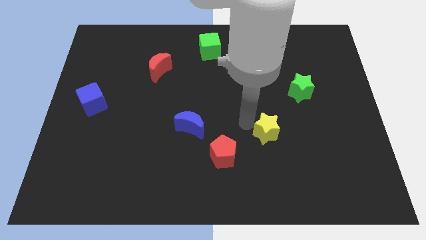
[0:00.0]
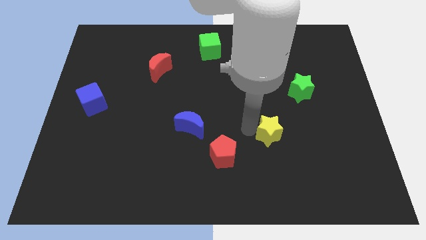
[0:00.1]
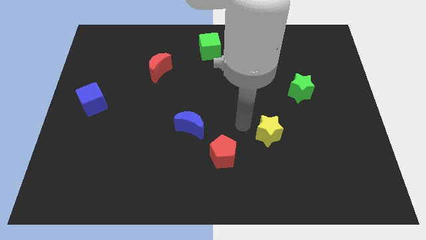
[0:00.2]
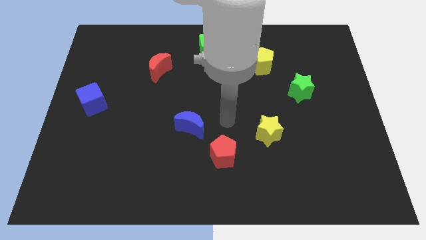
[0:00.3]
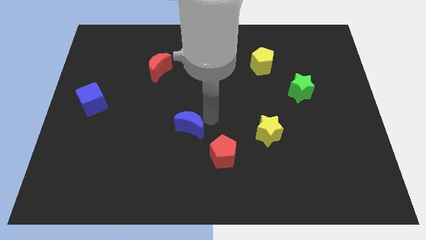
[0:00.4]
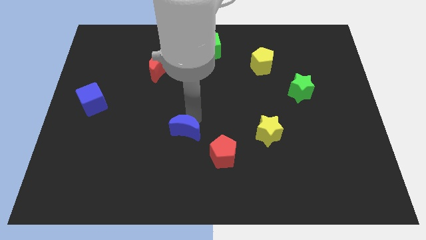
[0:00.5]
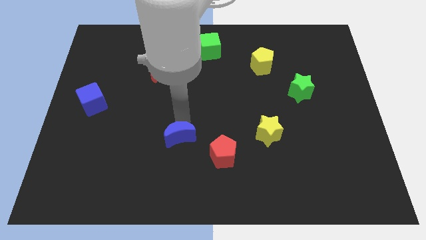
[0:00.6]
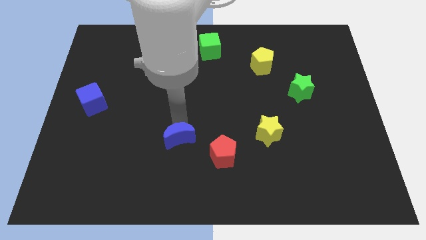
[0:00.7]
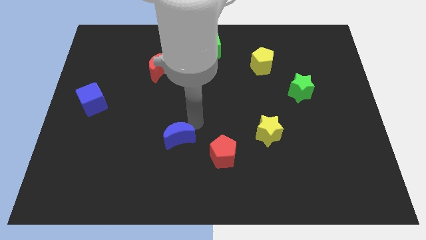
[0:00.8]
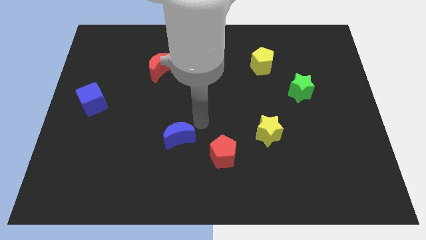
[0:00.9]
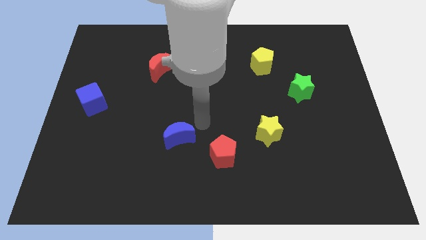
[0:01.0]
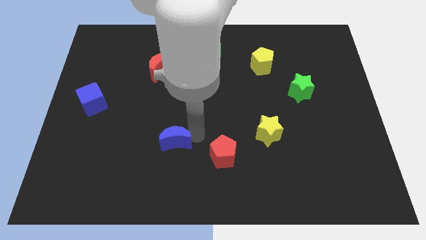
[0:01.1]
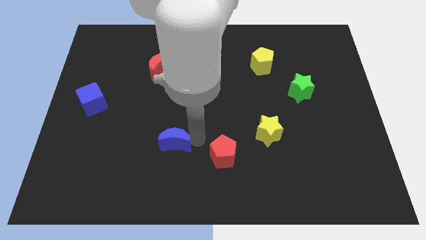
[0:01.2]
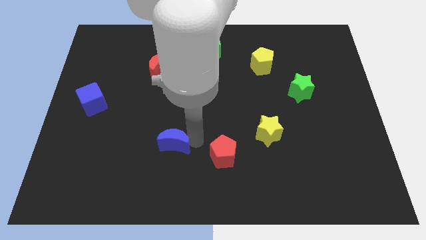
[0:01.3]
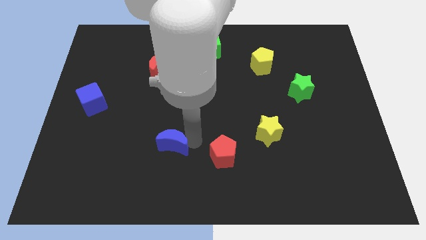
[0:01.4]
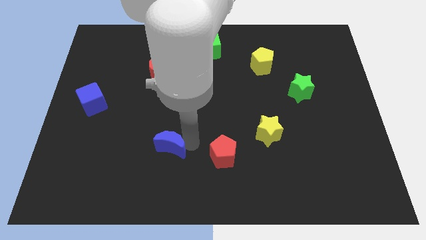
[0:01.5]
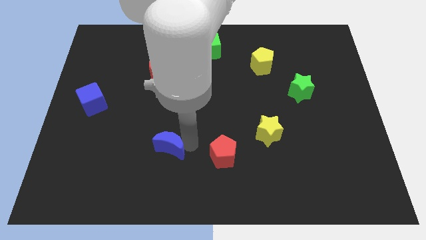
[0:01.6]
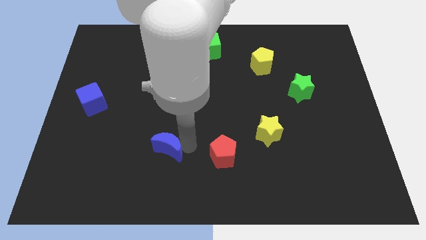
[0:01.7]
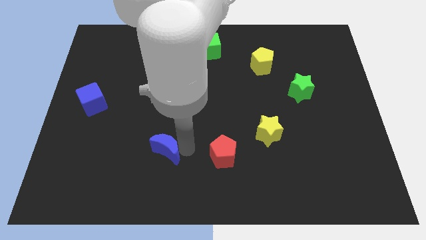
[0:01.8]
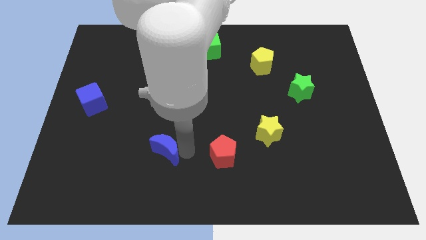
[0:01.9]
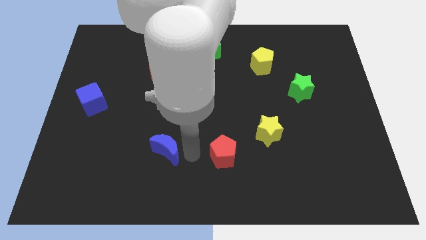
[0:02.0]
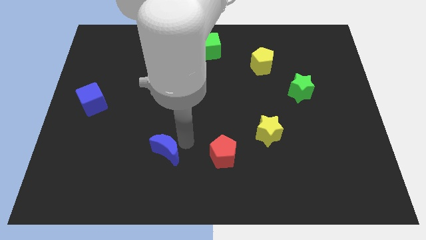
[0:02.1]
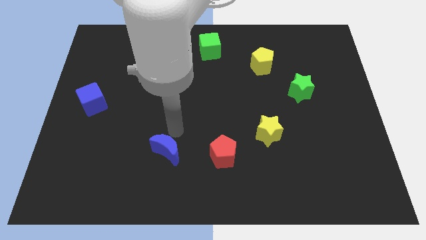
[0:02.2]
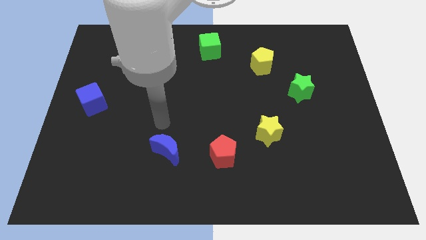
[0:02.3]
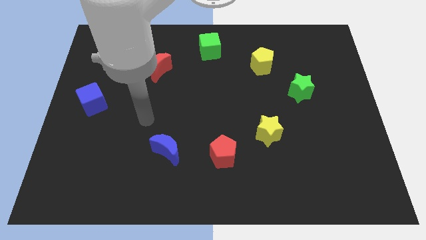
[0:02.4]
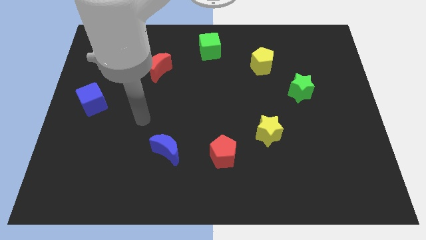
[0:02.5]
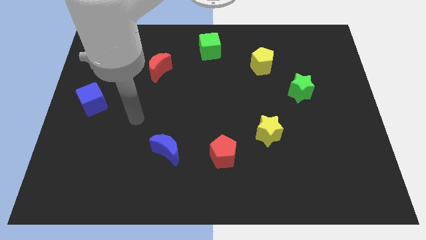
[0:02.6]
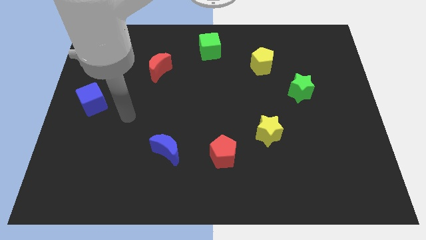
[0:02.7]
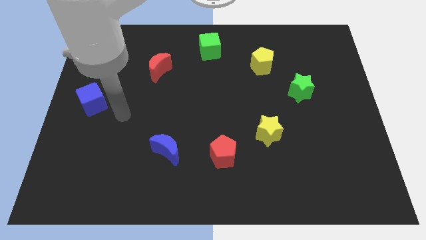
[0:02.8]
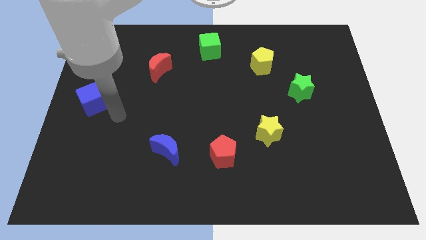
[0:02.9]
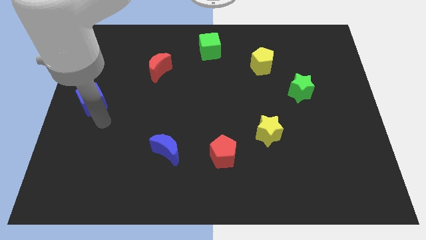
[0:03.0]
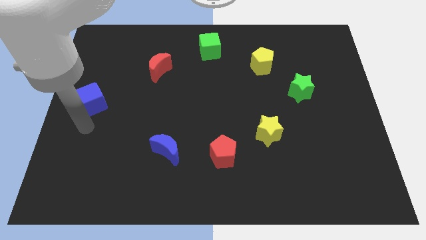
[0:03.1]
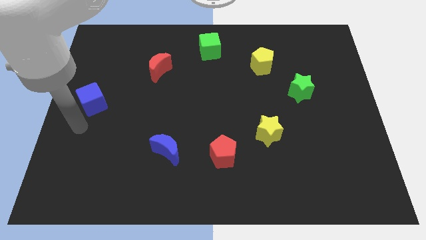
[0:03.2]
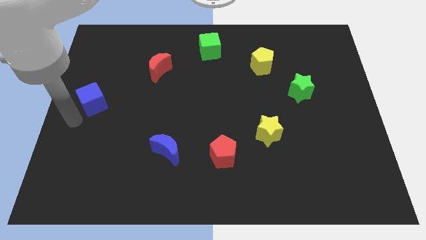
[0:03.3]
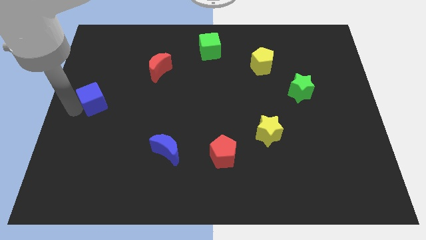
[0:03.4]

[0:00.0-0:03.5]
place the blue moon in between the red pentagon and blue cube

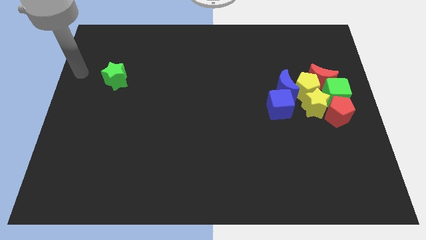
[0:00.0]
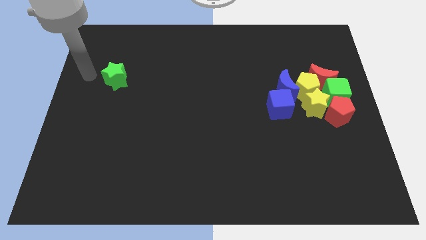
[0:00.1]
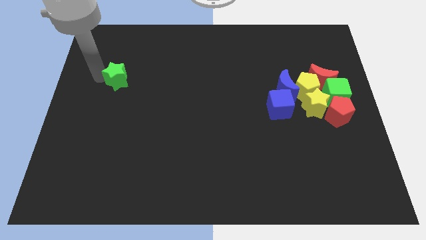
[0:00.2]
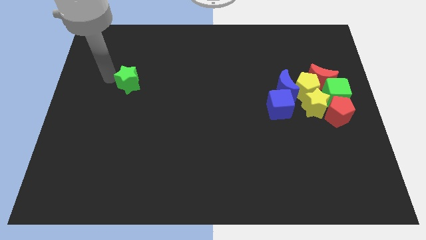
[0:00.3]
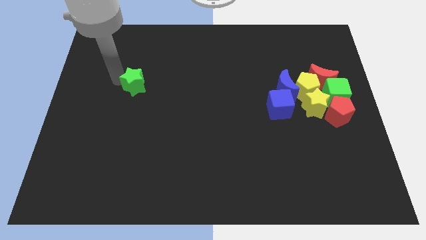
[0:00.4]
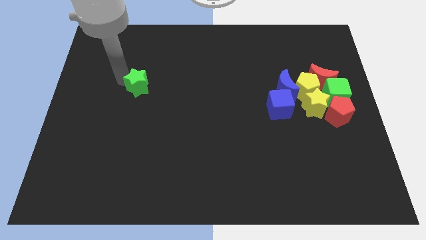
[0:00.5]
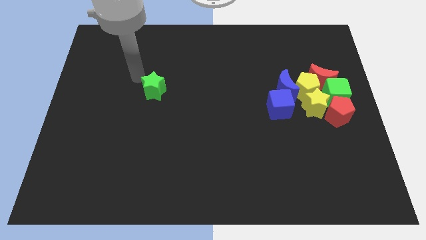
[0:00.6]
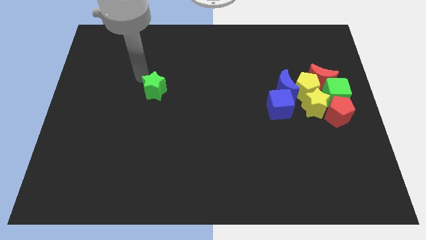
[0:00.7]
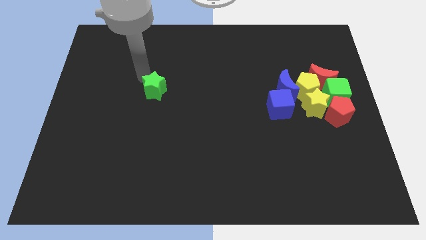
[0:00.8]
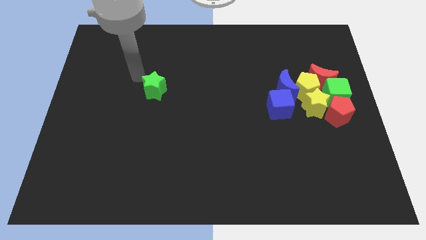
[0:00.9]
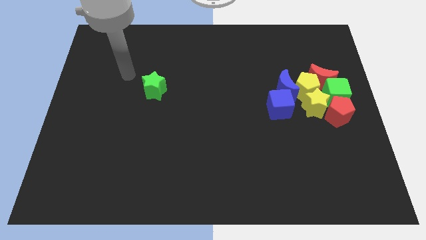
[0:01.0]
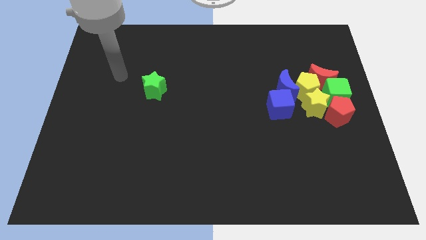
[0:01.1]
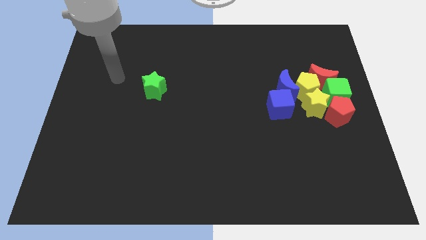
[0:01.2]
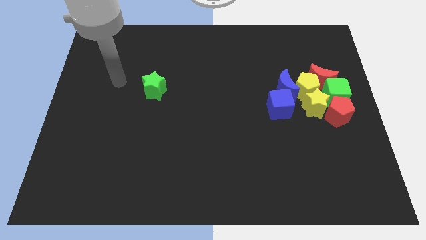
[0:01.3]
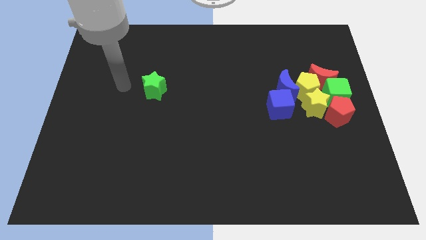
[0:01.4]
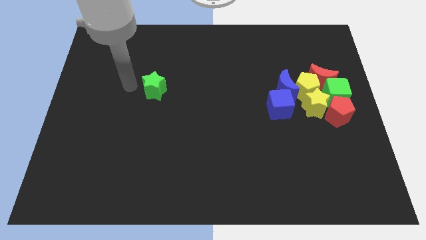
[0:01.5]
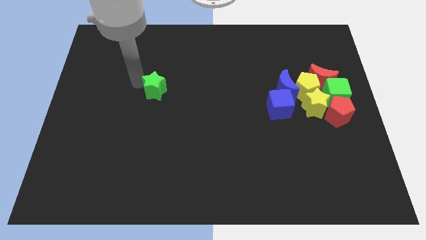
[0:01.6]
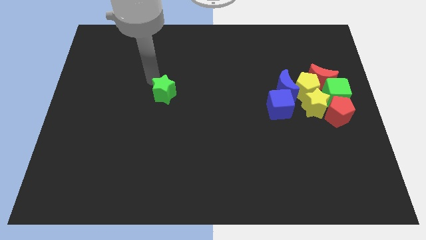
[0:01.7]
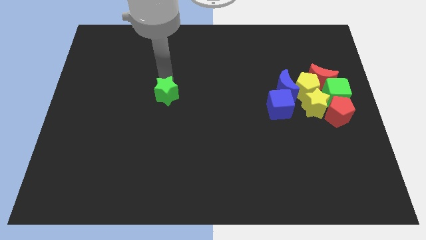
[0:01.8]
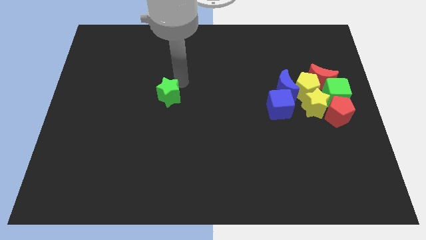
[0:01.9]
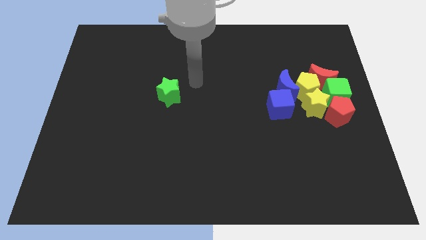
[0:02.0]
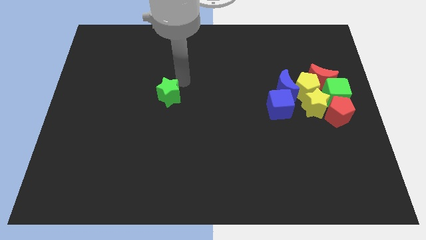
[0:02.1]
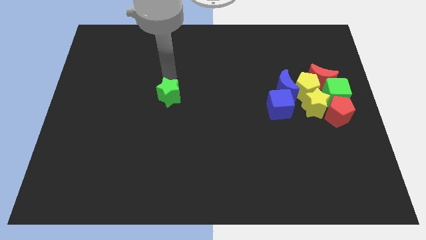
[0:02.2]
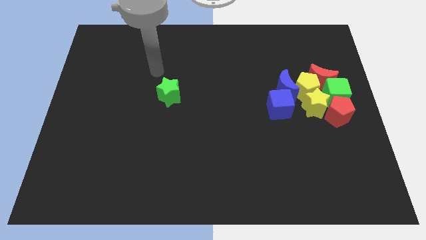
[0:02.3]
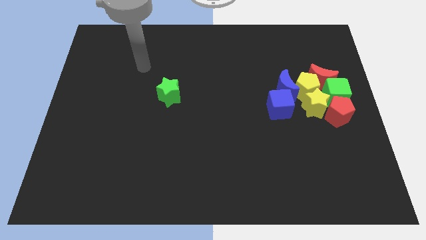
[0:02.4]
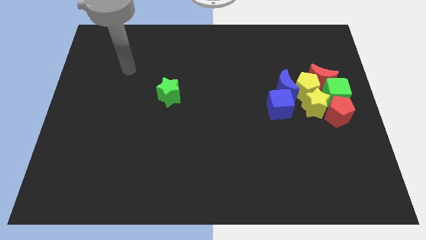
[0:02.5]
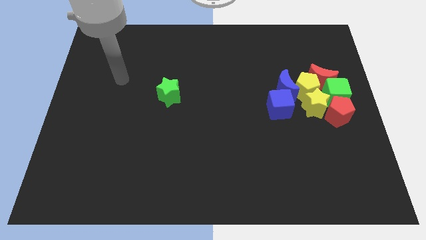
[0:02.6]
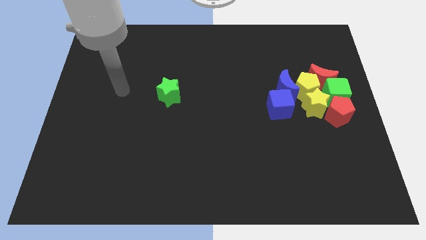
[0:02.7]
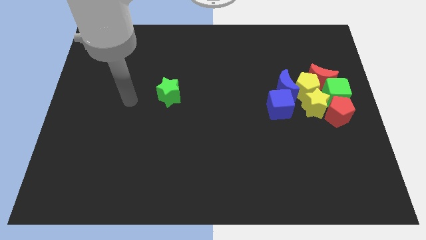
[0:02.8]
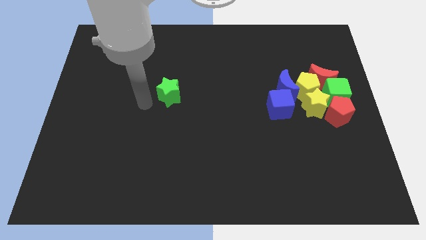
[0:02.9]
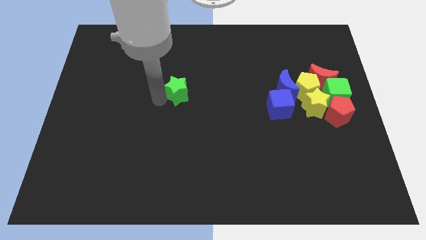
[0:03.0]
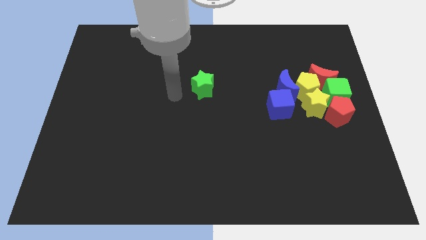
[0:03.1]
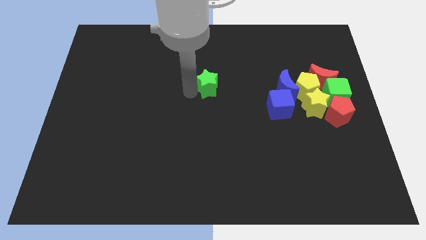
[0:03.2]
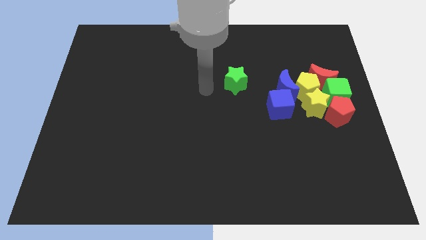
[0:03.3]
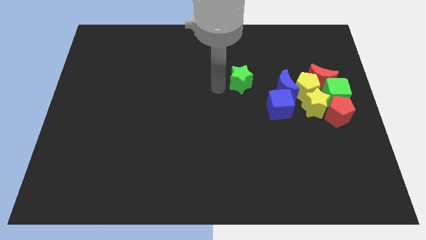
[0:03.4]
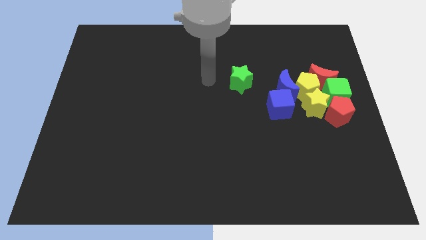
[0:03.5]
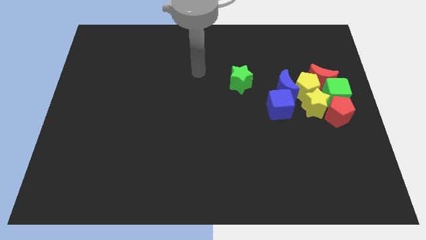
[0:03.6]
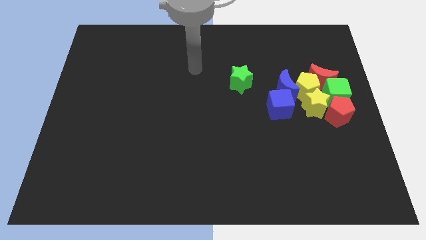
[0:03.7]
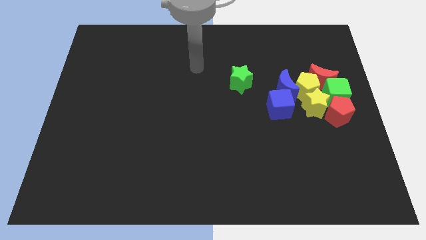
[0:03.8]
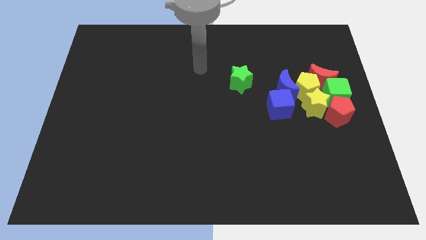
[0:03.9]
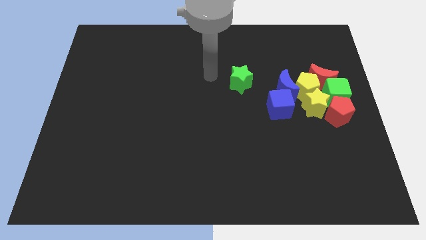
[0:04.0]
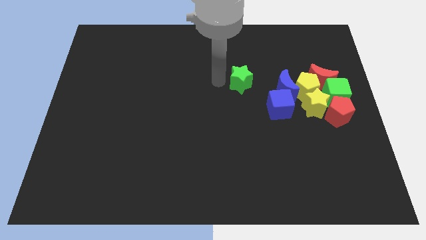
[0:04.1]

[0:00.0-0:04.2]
move the green star to the left of blue blocks

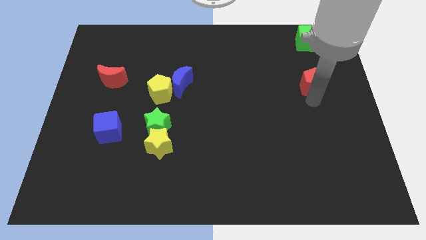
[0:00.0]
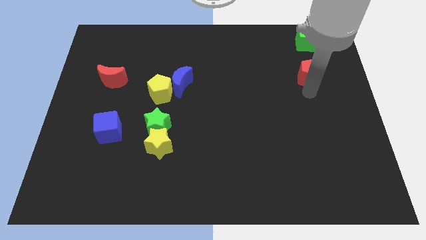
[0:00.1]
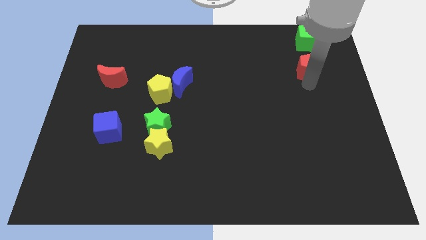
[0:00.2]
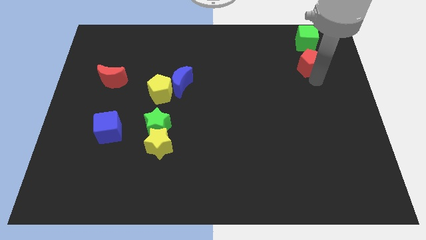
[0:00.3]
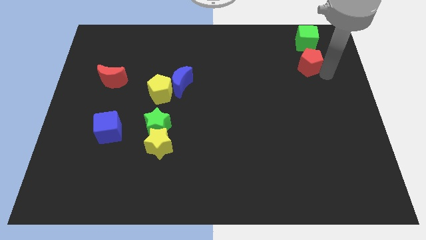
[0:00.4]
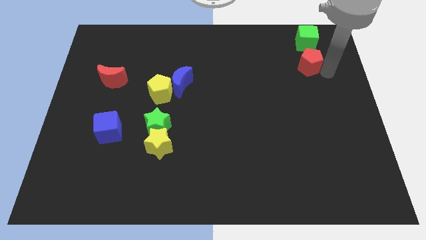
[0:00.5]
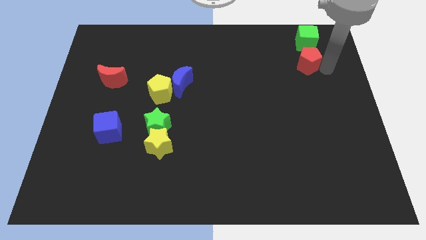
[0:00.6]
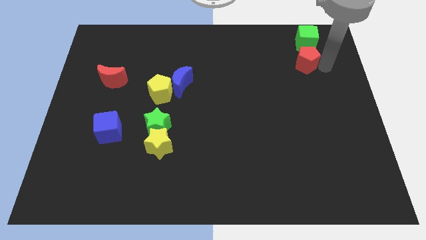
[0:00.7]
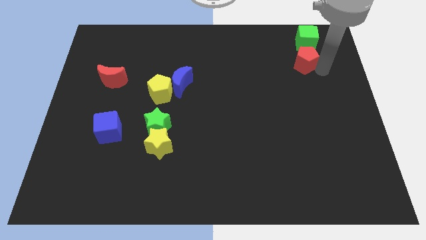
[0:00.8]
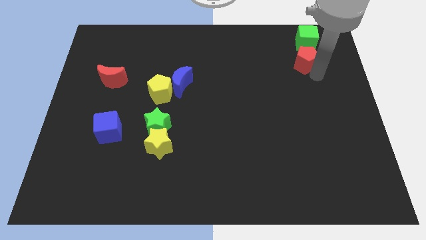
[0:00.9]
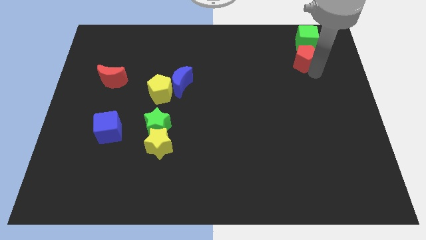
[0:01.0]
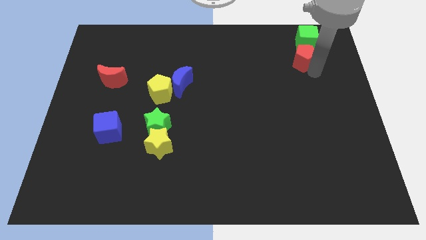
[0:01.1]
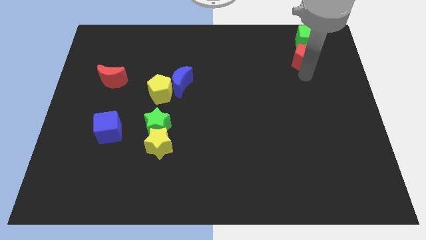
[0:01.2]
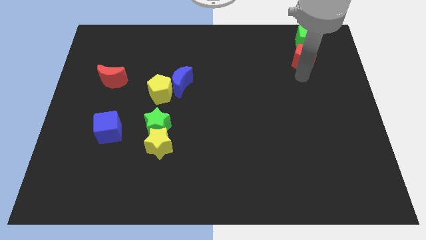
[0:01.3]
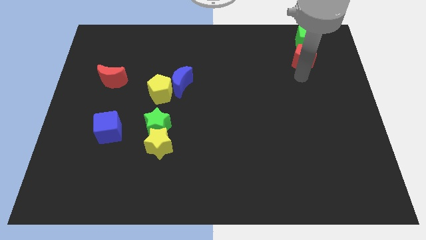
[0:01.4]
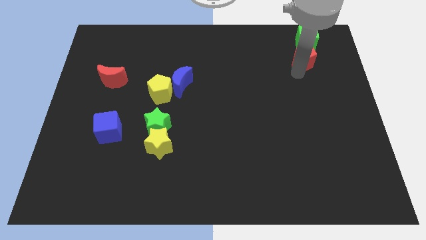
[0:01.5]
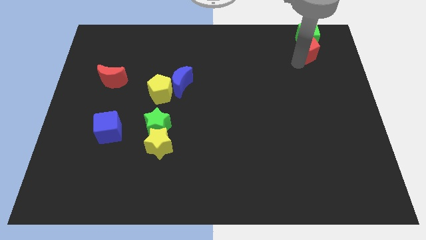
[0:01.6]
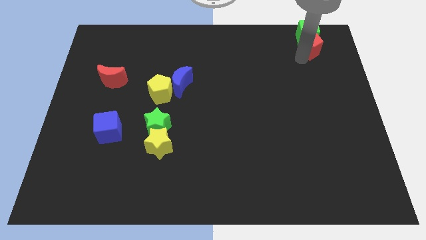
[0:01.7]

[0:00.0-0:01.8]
push the red pentagon into the green cube
